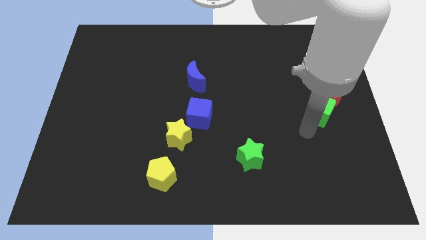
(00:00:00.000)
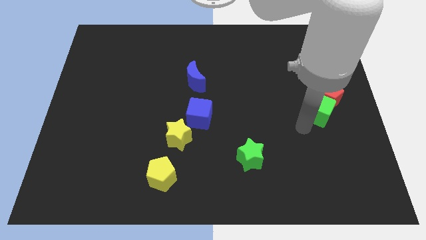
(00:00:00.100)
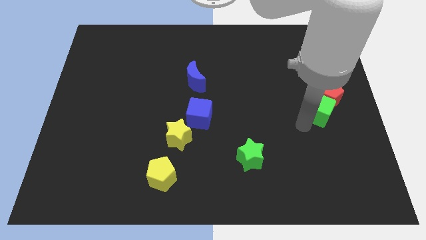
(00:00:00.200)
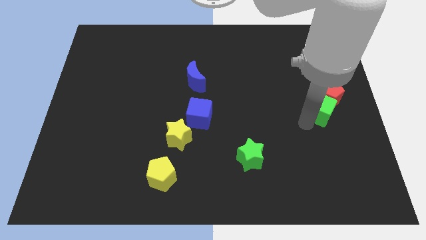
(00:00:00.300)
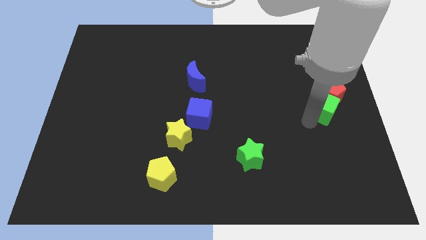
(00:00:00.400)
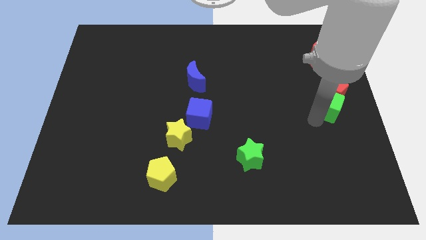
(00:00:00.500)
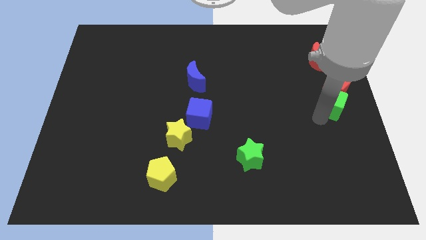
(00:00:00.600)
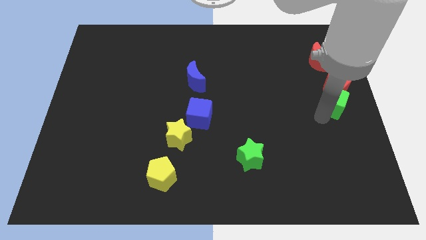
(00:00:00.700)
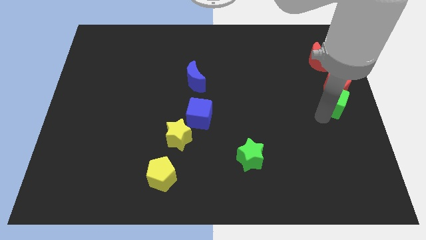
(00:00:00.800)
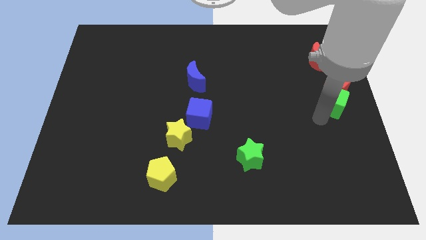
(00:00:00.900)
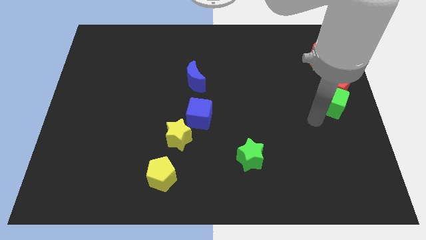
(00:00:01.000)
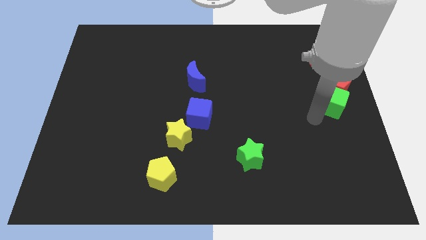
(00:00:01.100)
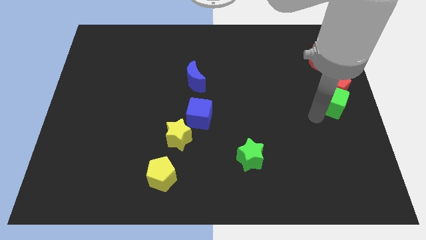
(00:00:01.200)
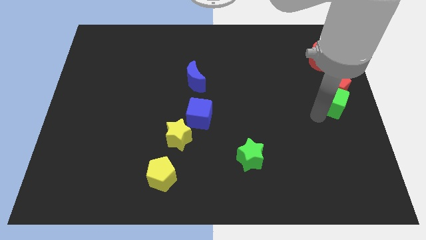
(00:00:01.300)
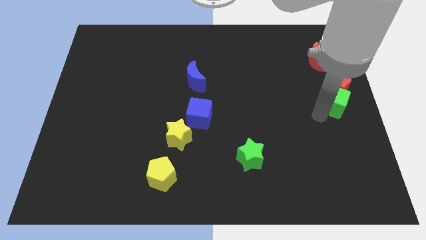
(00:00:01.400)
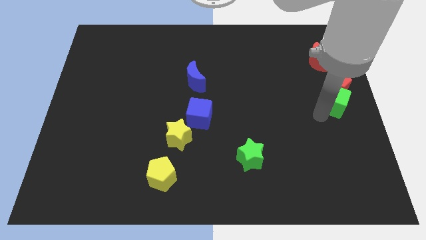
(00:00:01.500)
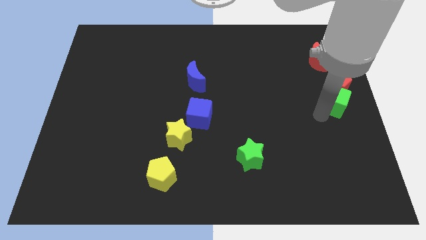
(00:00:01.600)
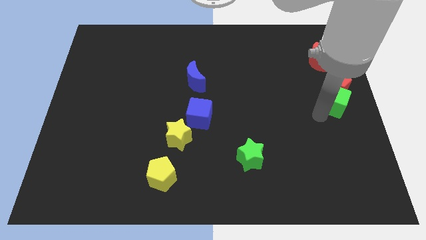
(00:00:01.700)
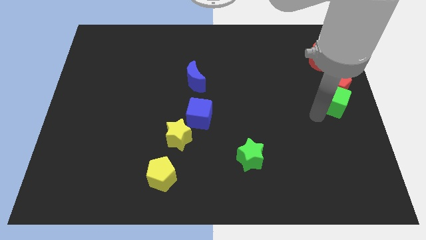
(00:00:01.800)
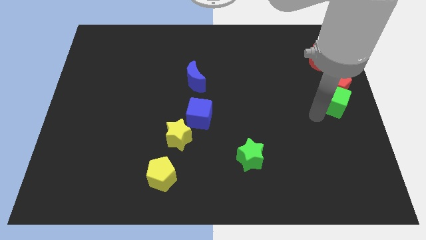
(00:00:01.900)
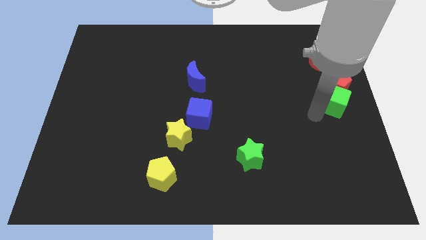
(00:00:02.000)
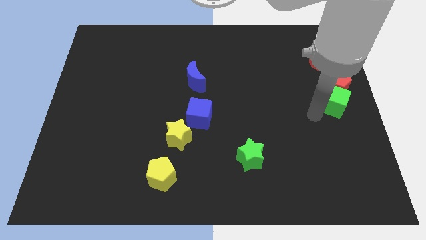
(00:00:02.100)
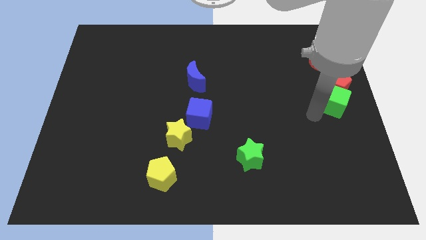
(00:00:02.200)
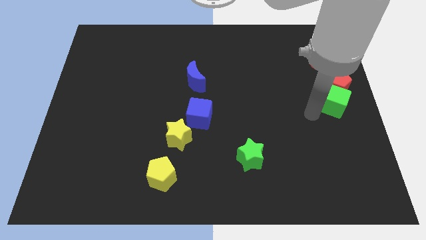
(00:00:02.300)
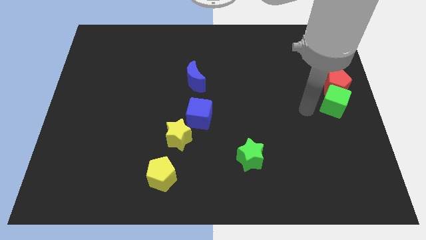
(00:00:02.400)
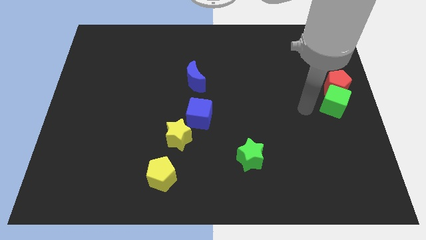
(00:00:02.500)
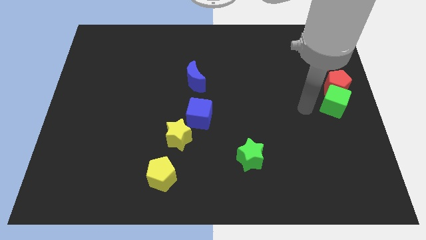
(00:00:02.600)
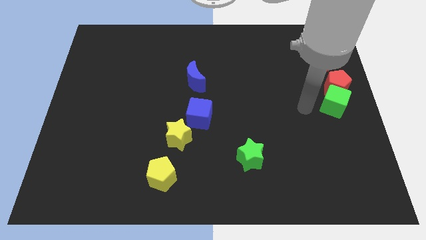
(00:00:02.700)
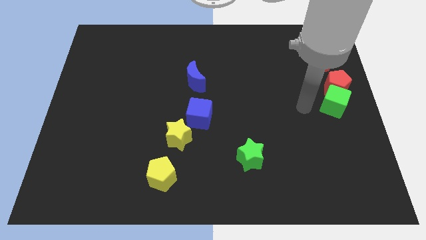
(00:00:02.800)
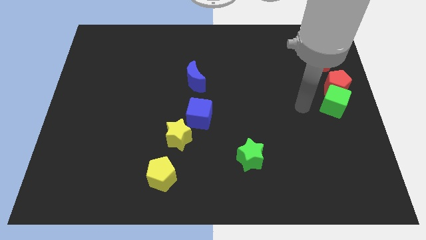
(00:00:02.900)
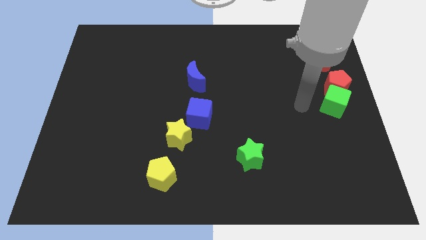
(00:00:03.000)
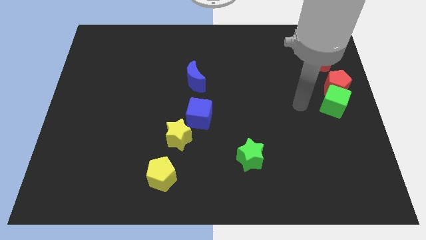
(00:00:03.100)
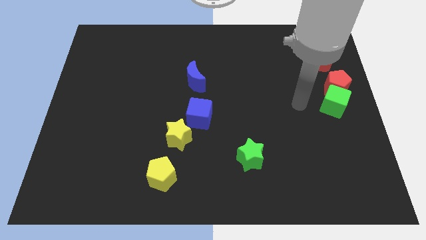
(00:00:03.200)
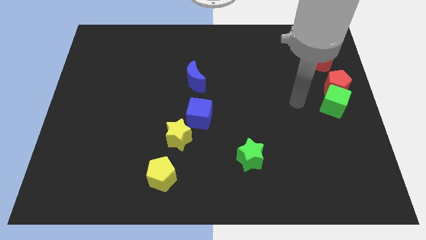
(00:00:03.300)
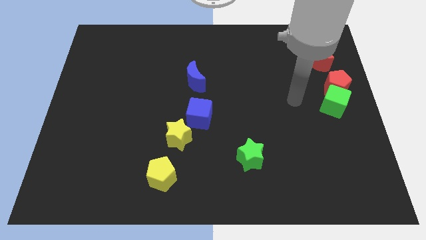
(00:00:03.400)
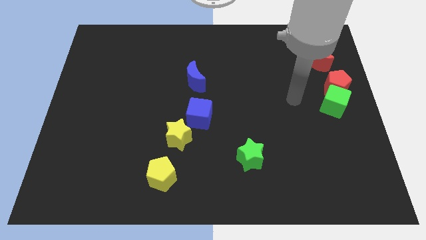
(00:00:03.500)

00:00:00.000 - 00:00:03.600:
place the green cube and red pentagon at the center right of the board

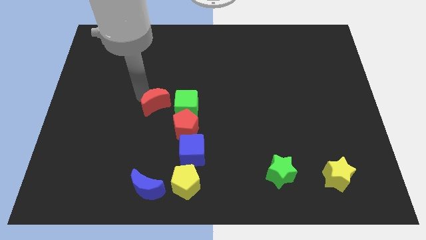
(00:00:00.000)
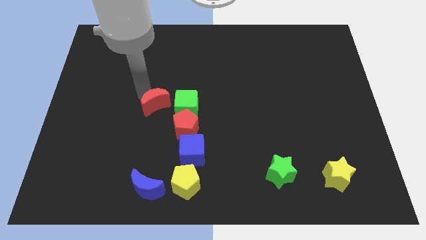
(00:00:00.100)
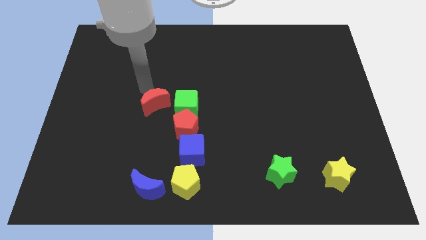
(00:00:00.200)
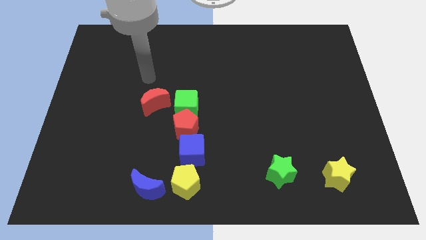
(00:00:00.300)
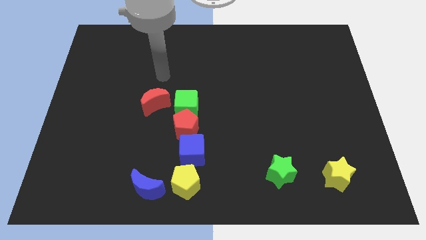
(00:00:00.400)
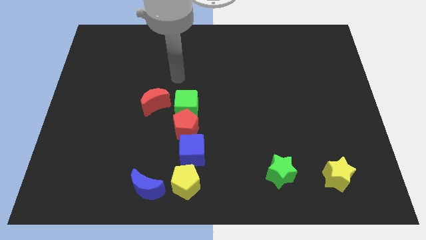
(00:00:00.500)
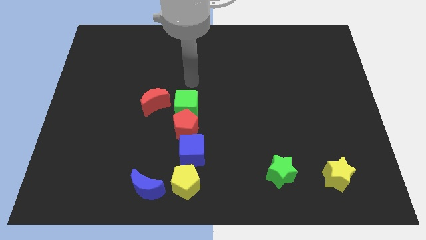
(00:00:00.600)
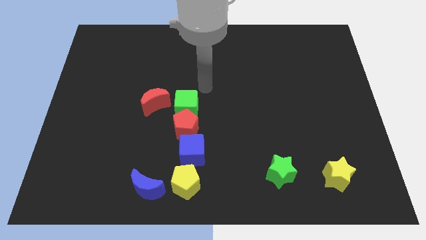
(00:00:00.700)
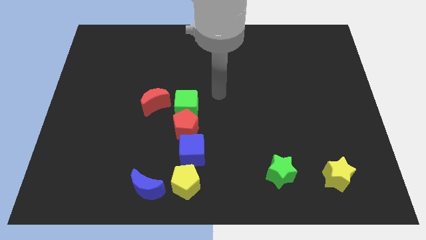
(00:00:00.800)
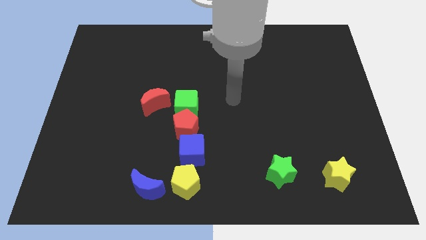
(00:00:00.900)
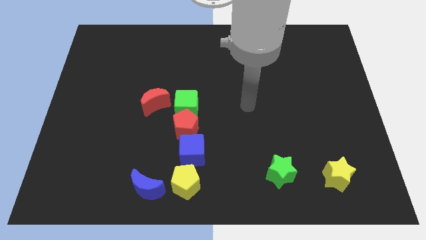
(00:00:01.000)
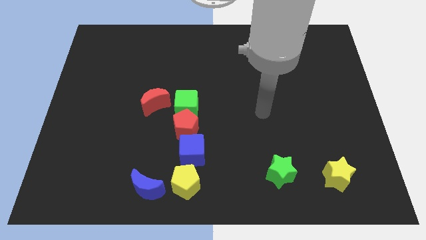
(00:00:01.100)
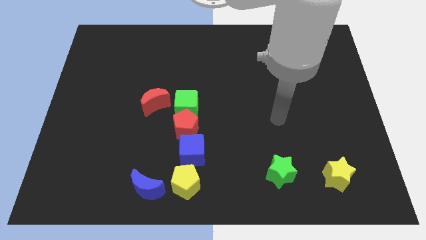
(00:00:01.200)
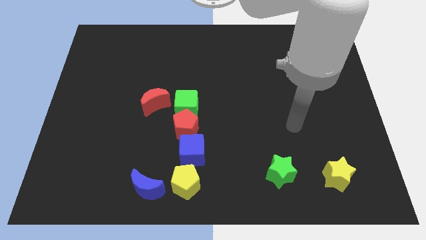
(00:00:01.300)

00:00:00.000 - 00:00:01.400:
move your arm away from the red moon

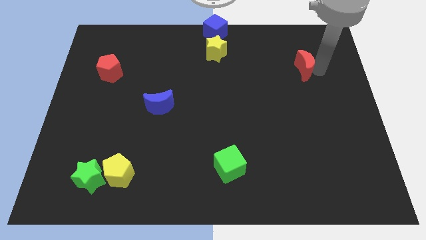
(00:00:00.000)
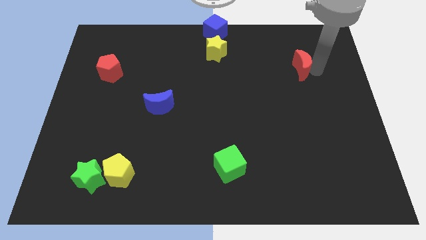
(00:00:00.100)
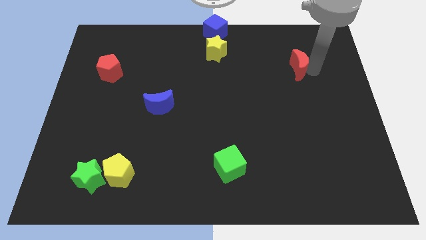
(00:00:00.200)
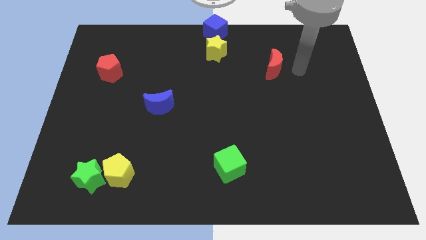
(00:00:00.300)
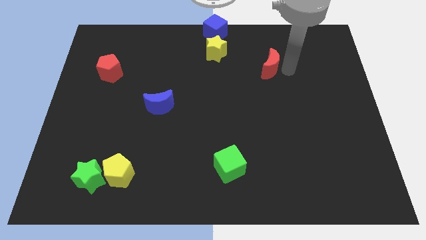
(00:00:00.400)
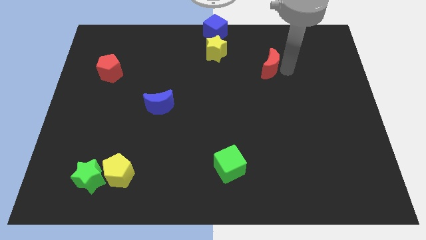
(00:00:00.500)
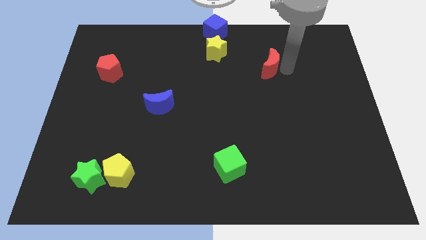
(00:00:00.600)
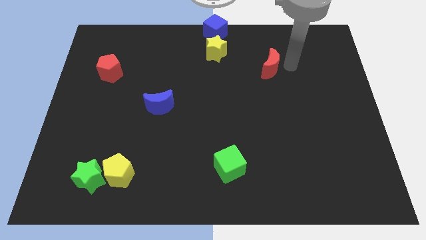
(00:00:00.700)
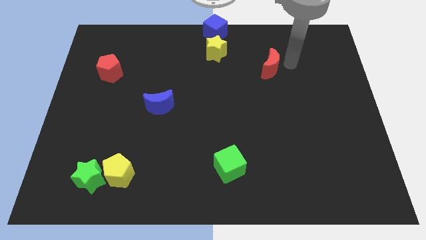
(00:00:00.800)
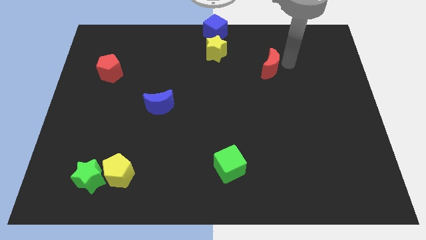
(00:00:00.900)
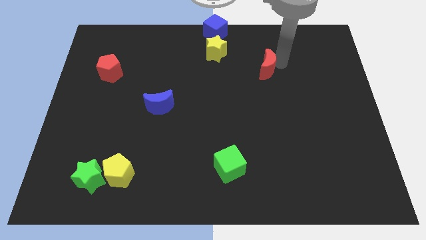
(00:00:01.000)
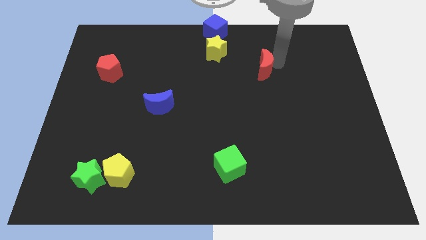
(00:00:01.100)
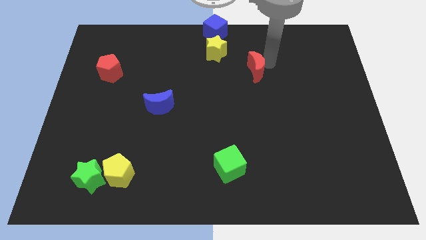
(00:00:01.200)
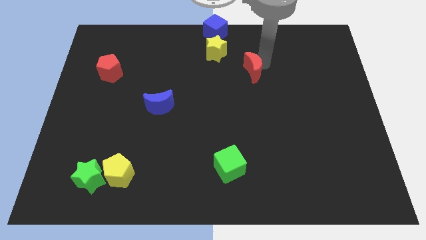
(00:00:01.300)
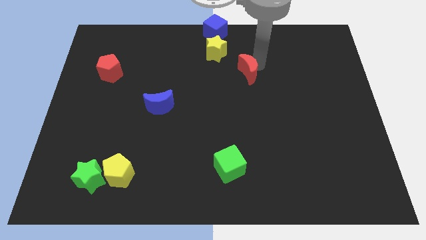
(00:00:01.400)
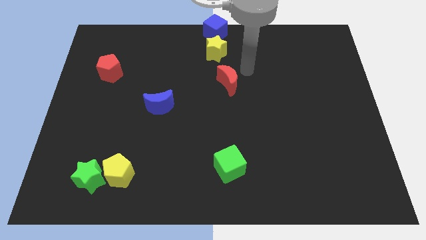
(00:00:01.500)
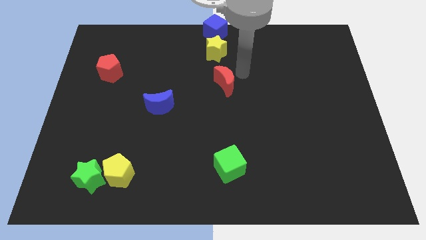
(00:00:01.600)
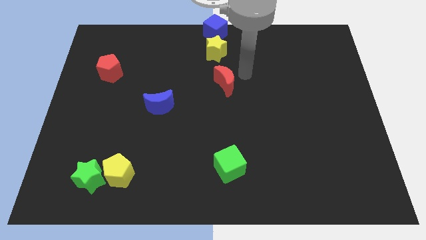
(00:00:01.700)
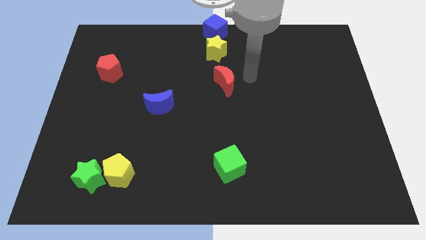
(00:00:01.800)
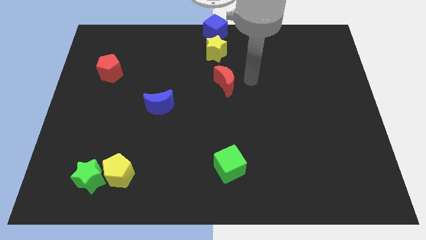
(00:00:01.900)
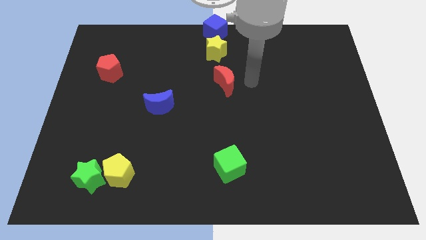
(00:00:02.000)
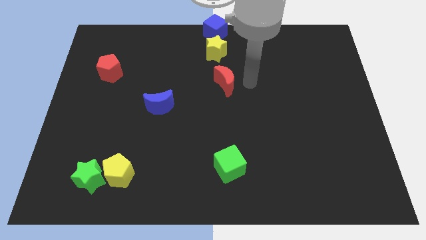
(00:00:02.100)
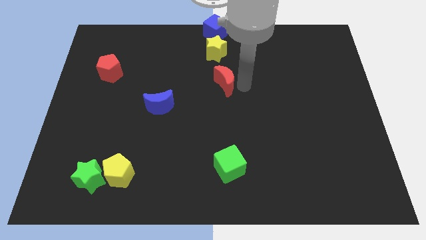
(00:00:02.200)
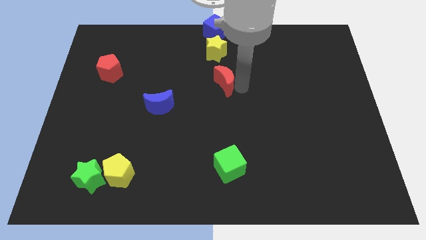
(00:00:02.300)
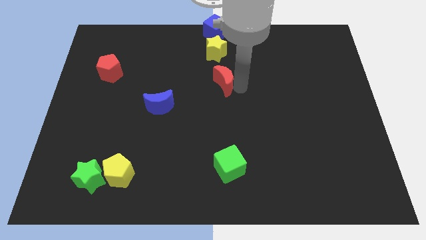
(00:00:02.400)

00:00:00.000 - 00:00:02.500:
place the red moon below the yellow star

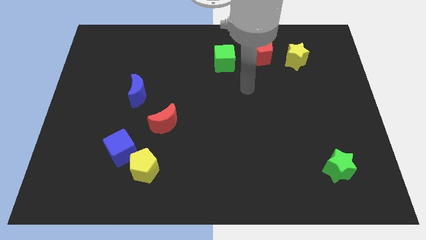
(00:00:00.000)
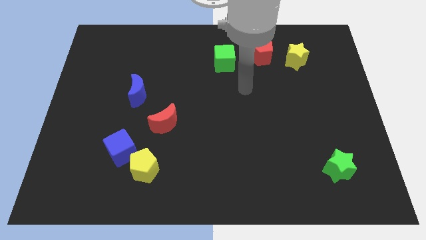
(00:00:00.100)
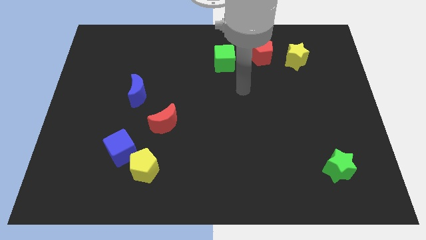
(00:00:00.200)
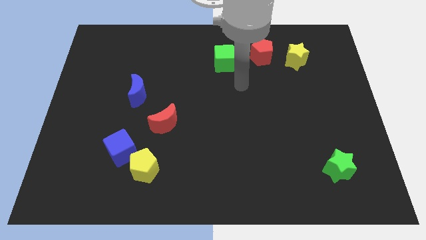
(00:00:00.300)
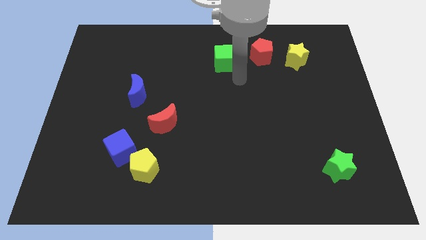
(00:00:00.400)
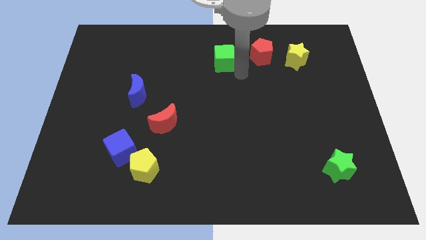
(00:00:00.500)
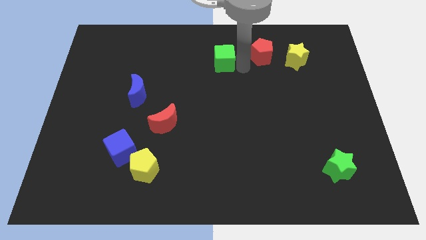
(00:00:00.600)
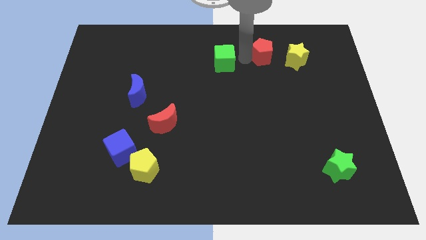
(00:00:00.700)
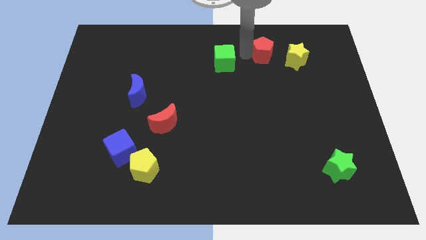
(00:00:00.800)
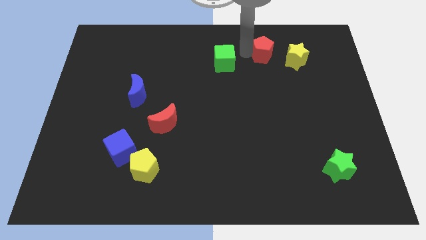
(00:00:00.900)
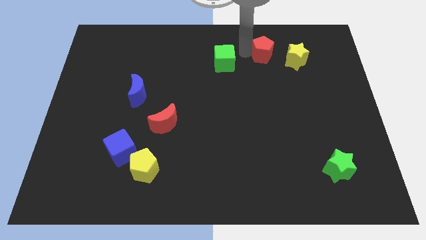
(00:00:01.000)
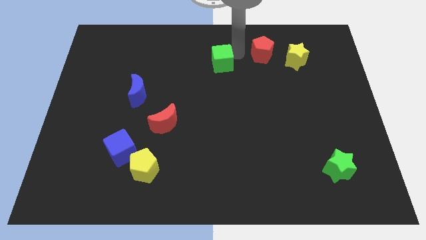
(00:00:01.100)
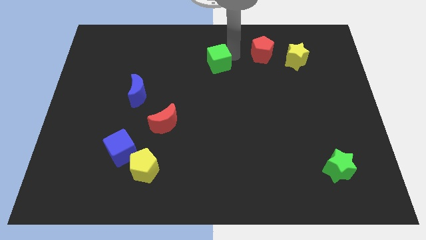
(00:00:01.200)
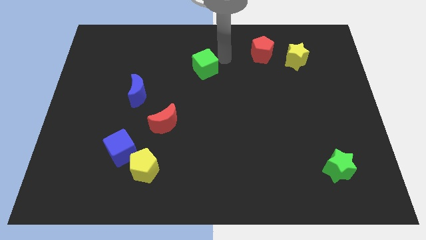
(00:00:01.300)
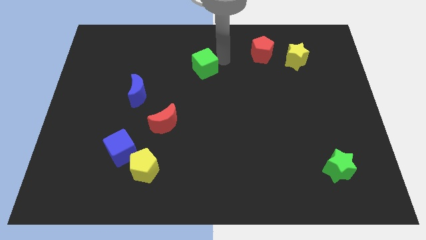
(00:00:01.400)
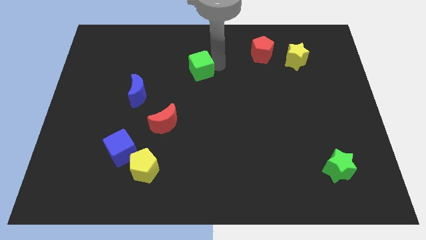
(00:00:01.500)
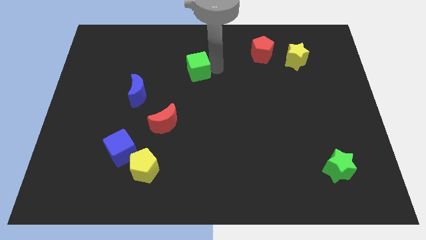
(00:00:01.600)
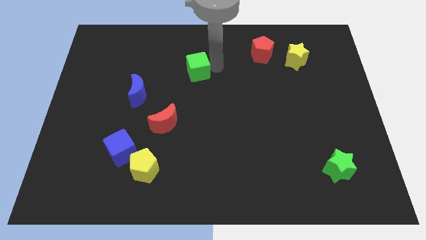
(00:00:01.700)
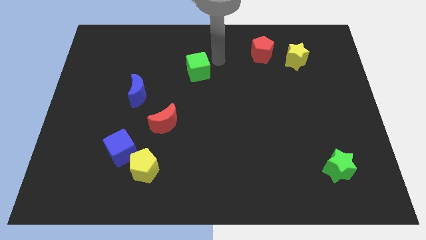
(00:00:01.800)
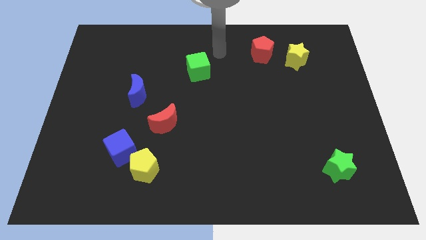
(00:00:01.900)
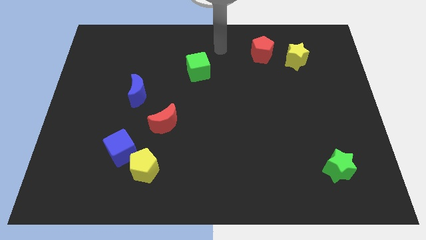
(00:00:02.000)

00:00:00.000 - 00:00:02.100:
push the green cube towards the blue crescent
